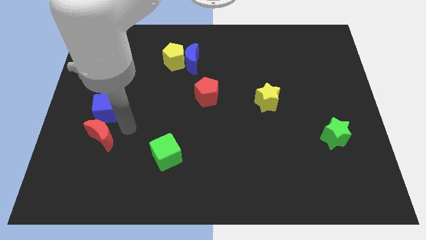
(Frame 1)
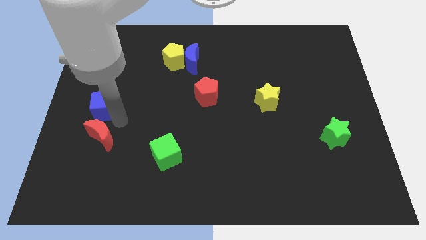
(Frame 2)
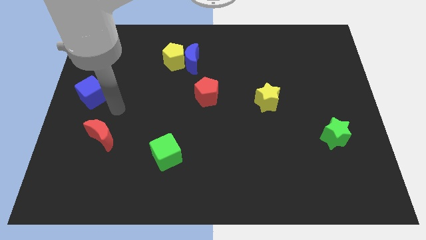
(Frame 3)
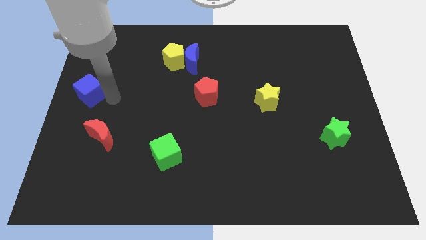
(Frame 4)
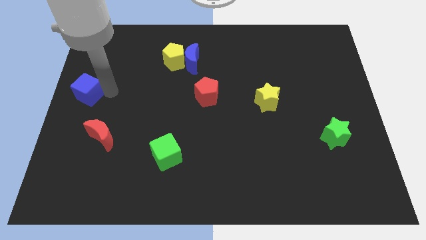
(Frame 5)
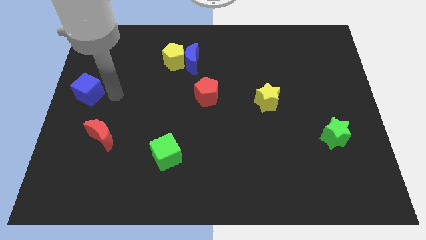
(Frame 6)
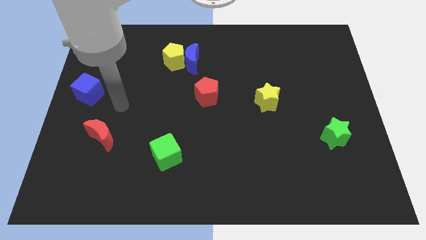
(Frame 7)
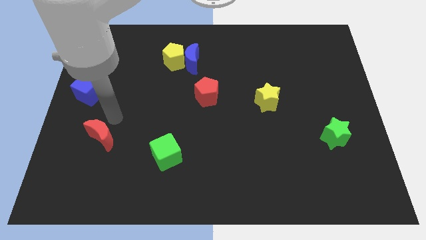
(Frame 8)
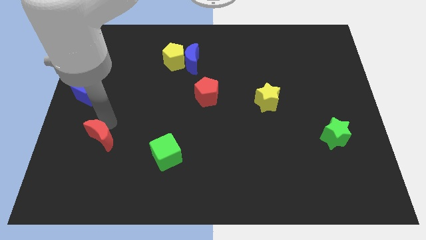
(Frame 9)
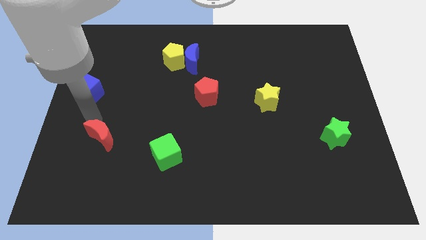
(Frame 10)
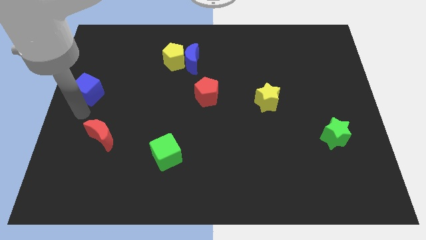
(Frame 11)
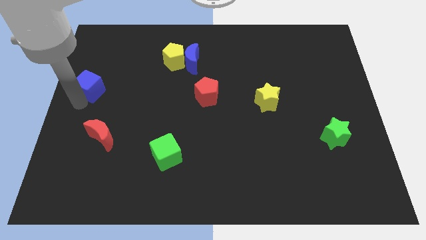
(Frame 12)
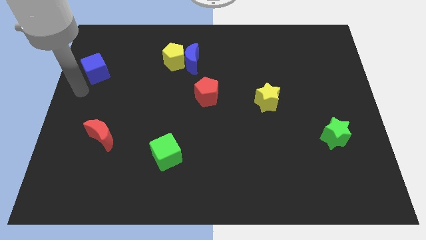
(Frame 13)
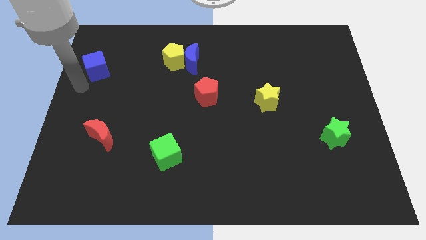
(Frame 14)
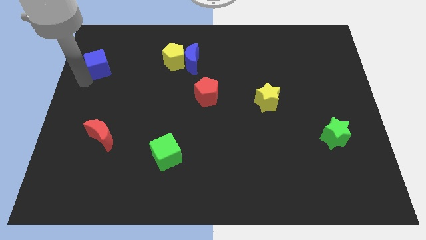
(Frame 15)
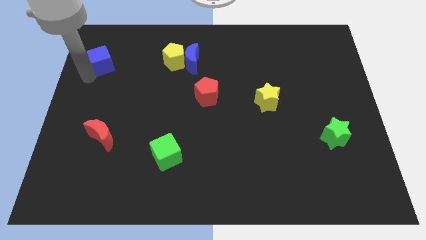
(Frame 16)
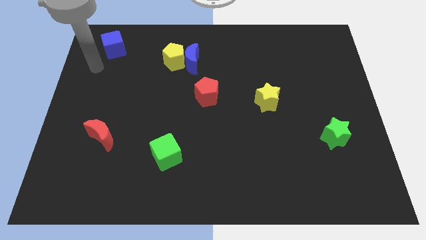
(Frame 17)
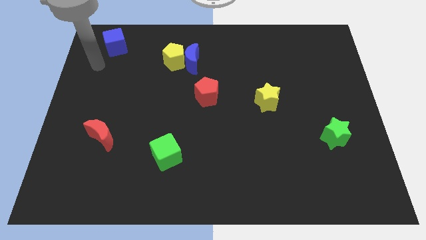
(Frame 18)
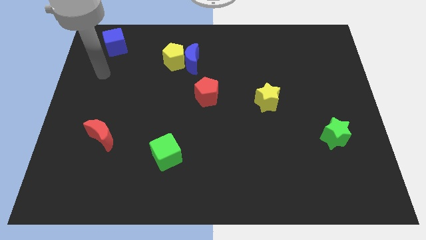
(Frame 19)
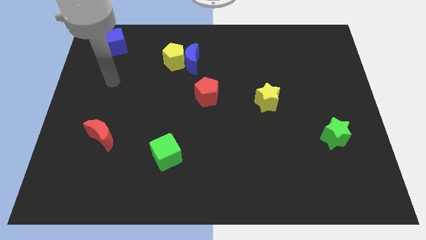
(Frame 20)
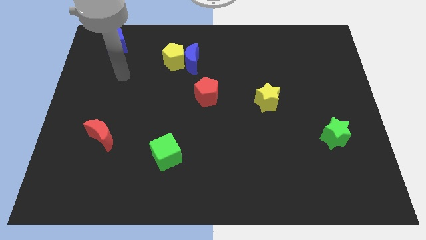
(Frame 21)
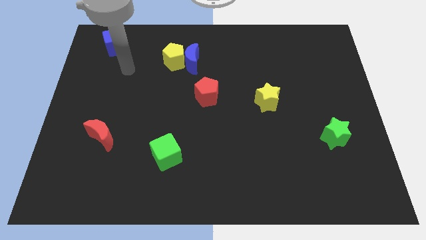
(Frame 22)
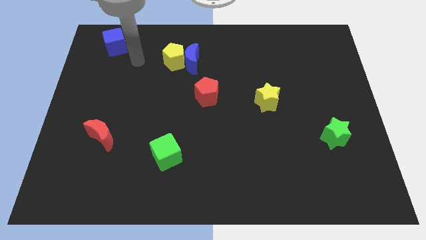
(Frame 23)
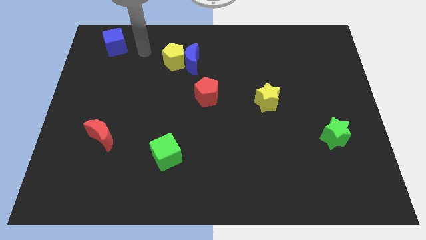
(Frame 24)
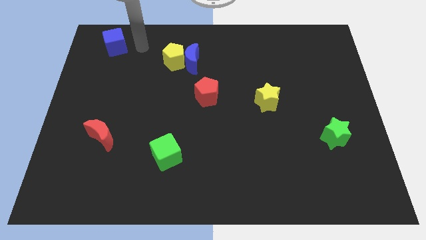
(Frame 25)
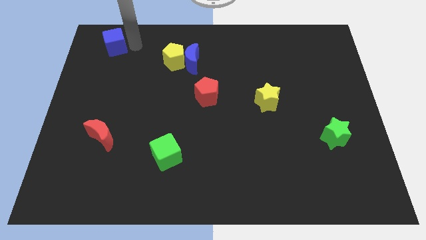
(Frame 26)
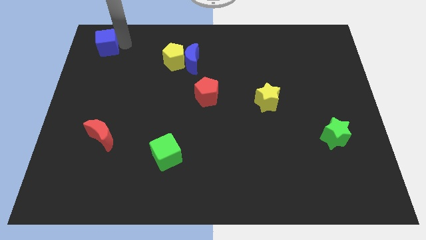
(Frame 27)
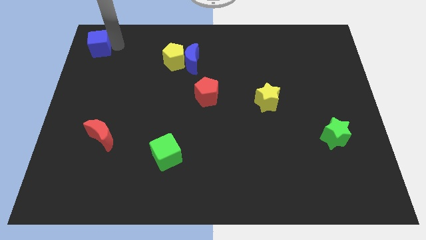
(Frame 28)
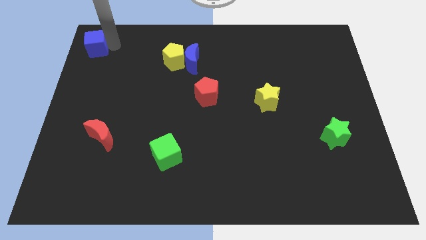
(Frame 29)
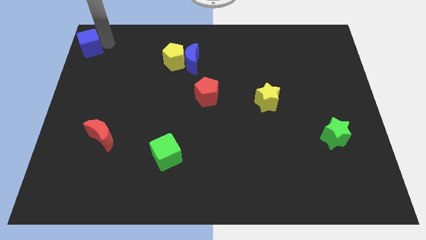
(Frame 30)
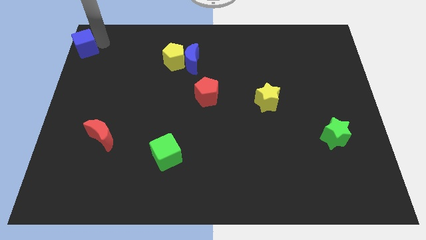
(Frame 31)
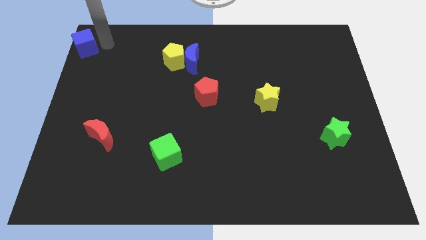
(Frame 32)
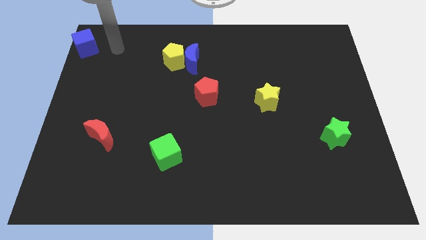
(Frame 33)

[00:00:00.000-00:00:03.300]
push the blue cube to the top left

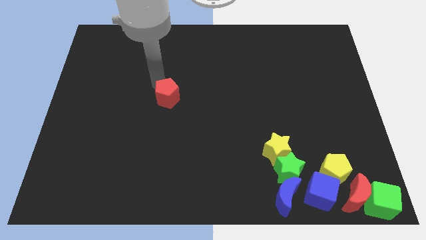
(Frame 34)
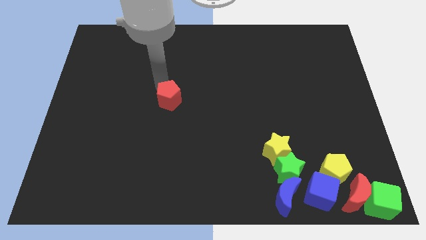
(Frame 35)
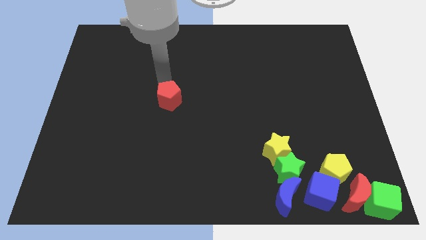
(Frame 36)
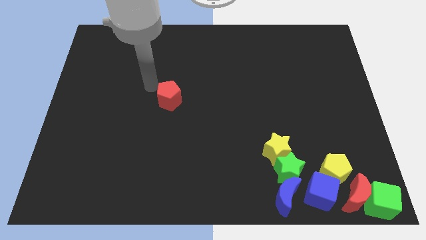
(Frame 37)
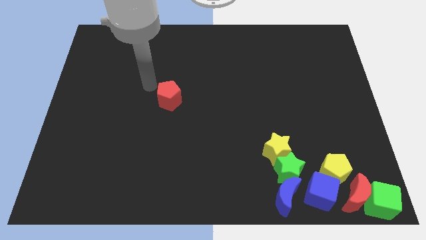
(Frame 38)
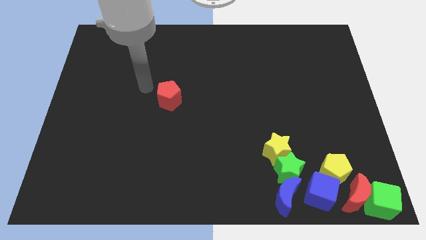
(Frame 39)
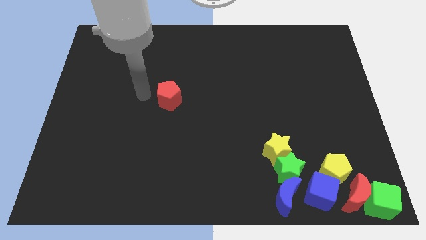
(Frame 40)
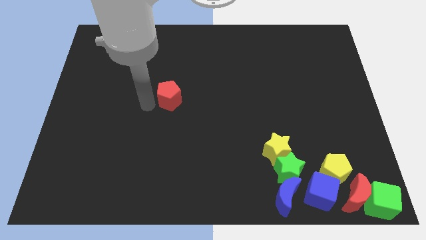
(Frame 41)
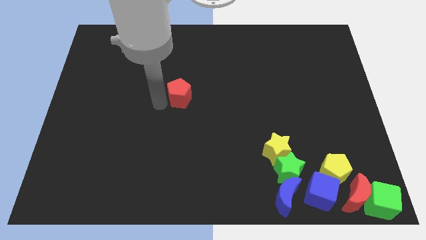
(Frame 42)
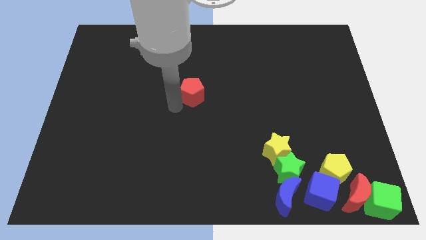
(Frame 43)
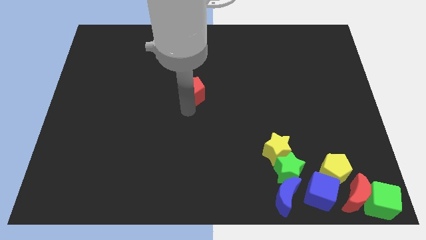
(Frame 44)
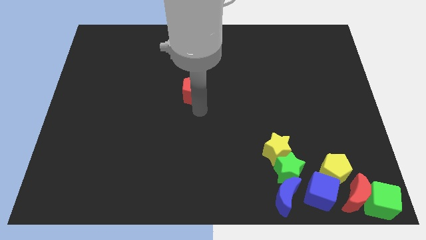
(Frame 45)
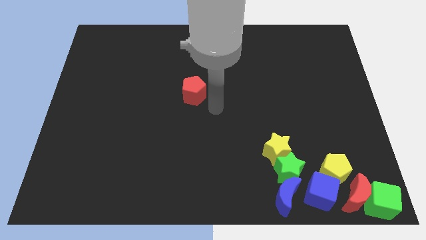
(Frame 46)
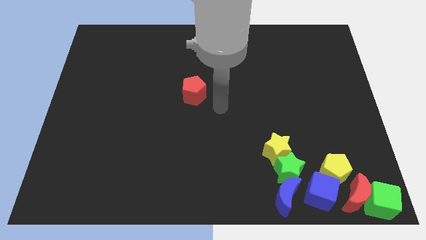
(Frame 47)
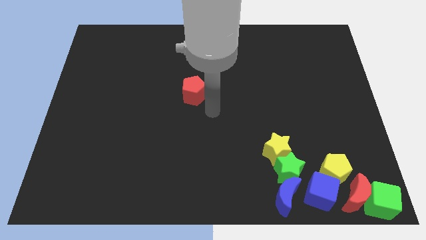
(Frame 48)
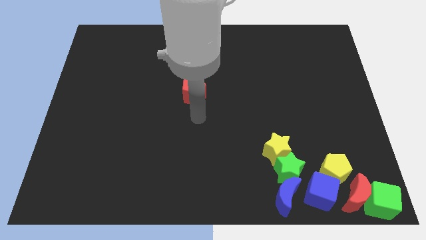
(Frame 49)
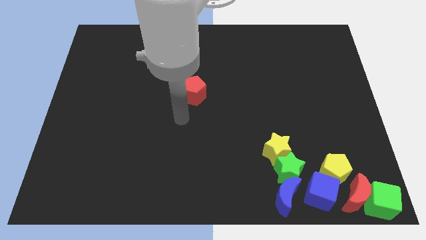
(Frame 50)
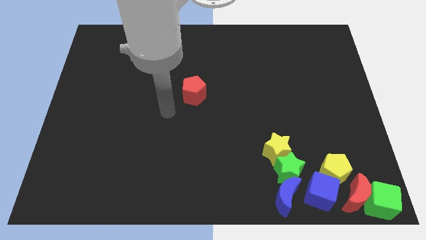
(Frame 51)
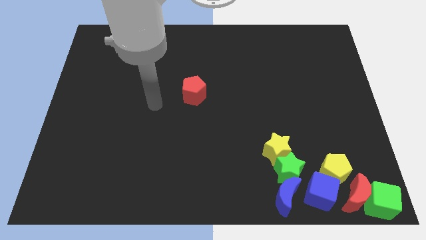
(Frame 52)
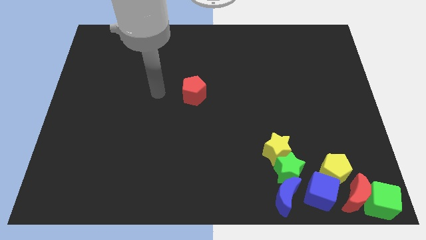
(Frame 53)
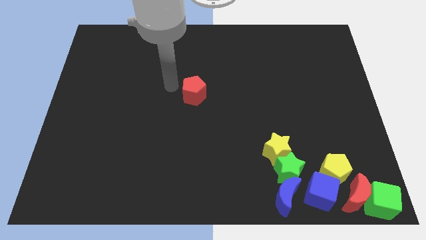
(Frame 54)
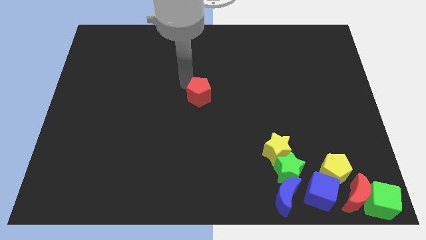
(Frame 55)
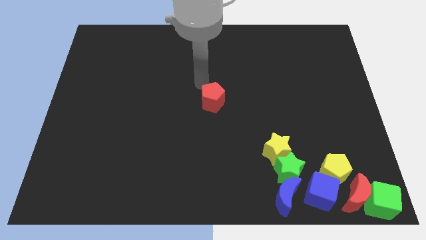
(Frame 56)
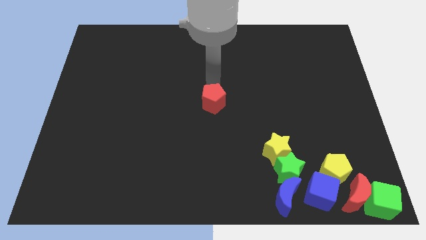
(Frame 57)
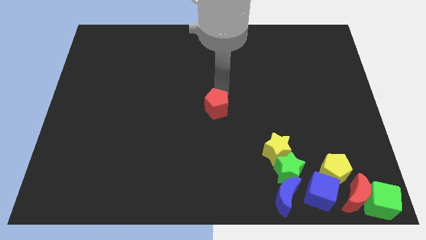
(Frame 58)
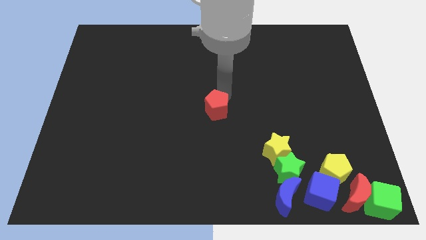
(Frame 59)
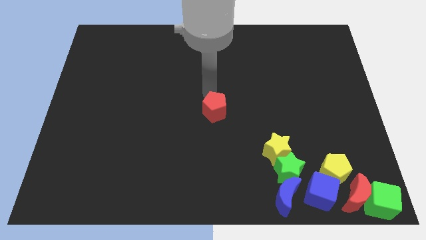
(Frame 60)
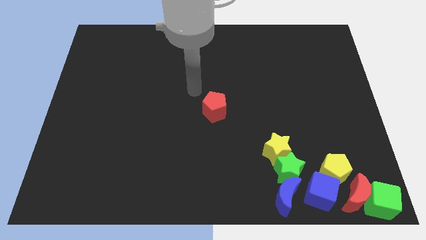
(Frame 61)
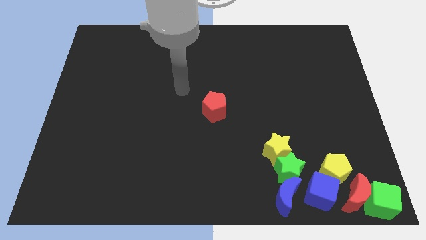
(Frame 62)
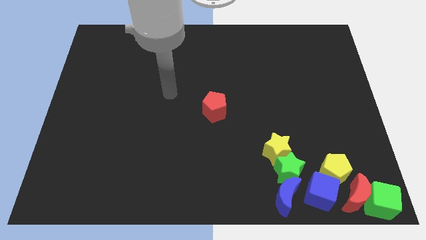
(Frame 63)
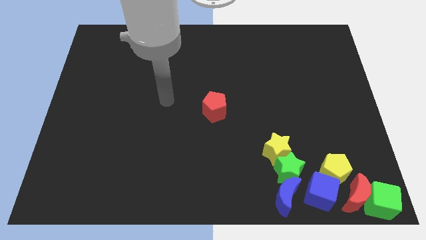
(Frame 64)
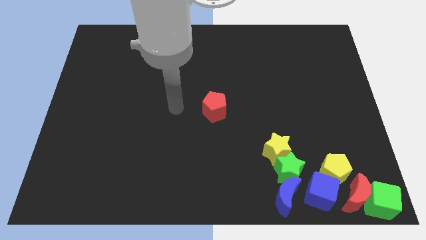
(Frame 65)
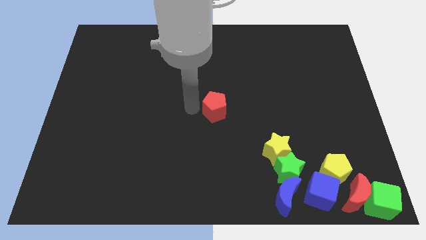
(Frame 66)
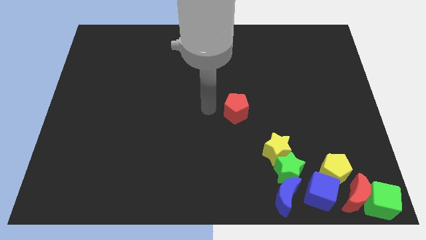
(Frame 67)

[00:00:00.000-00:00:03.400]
push the red pentagon downwards

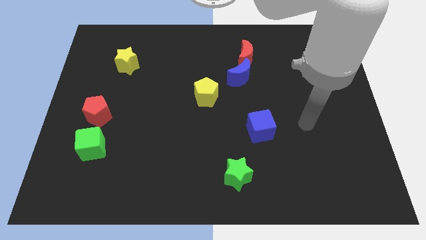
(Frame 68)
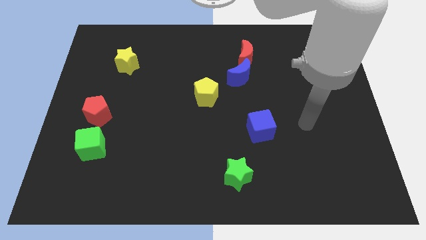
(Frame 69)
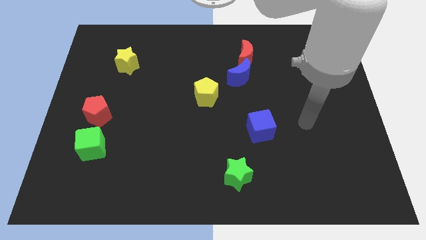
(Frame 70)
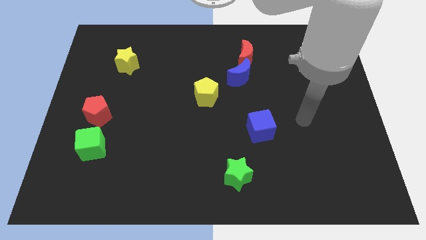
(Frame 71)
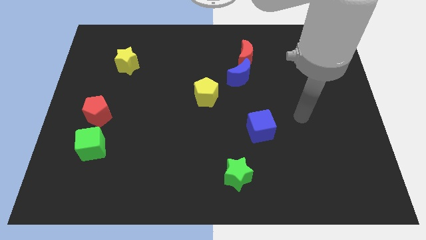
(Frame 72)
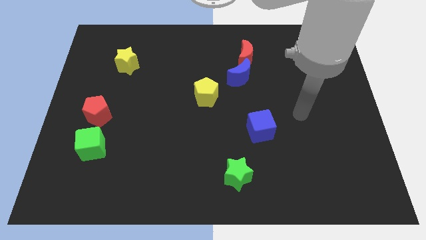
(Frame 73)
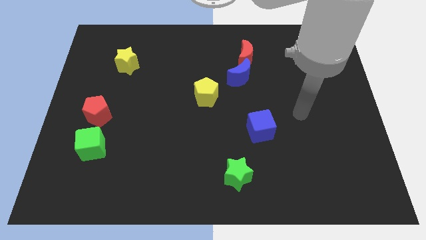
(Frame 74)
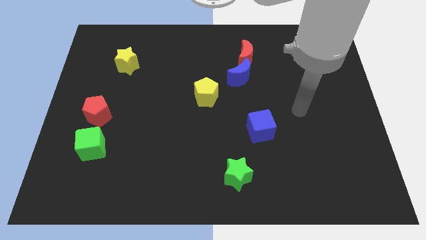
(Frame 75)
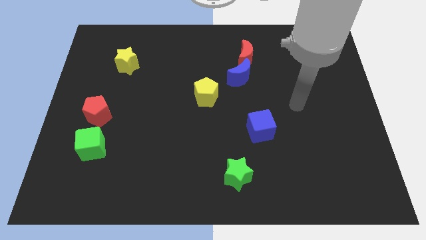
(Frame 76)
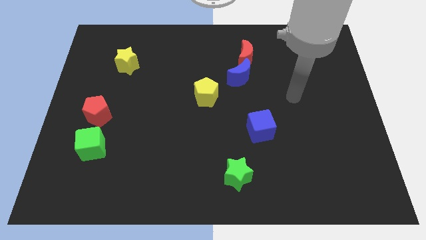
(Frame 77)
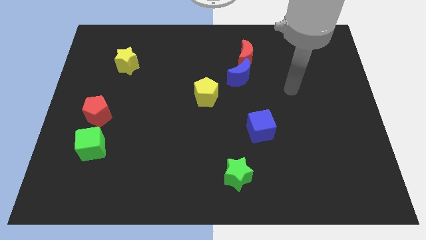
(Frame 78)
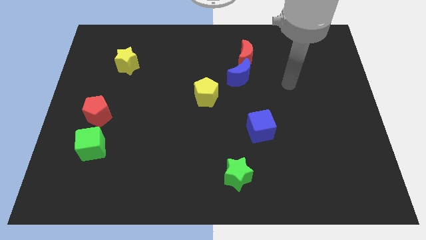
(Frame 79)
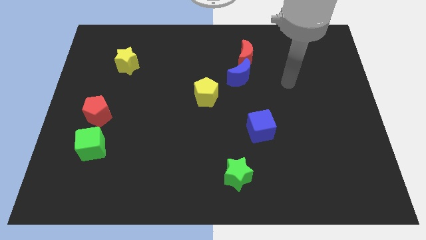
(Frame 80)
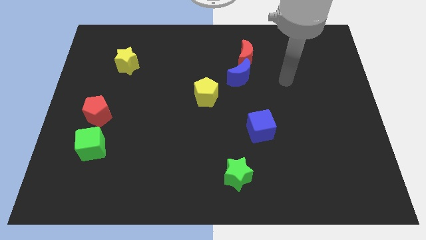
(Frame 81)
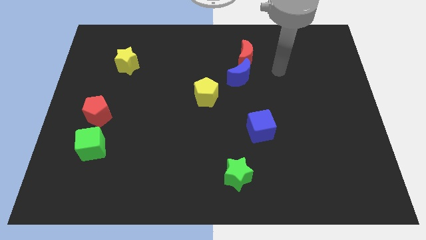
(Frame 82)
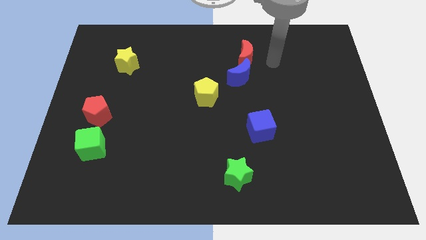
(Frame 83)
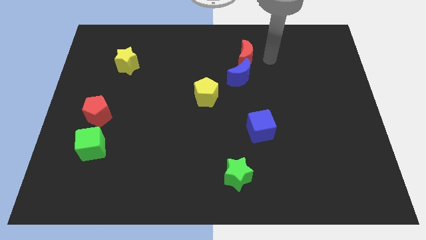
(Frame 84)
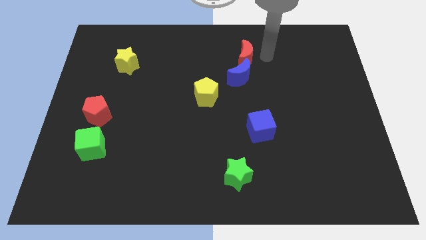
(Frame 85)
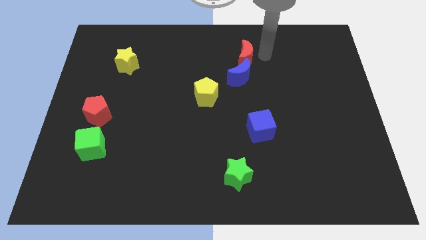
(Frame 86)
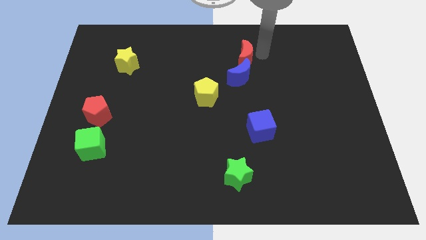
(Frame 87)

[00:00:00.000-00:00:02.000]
place your arm to the right of red moon

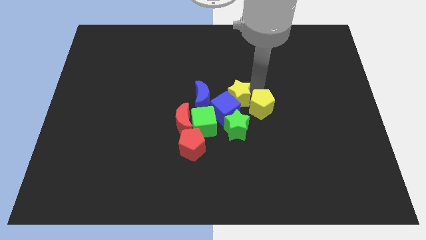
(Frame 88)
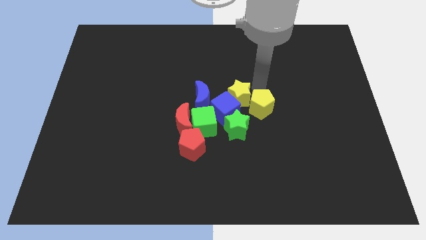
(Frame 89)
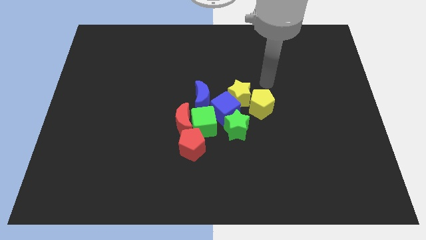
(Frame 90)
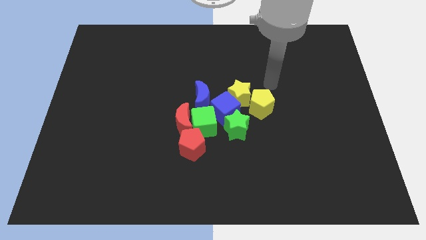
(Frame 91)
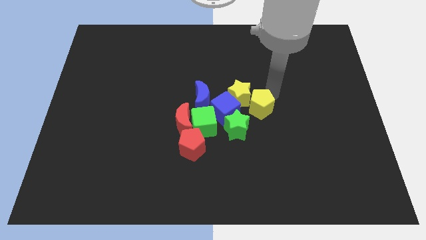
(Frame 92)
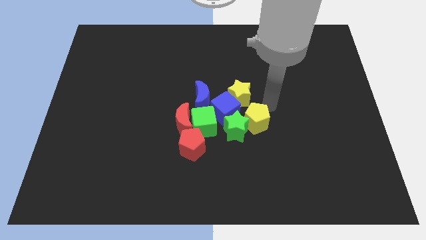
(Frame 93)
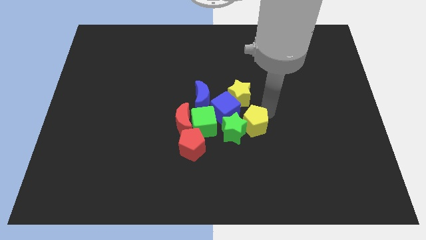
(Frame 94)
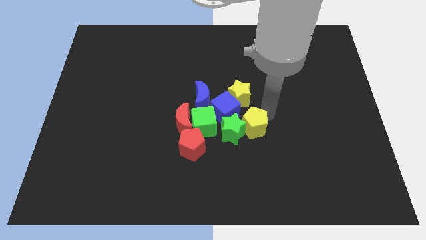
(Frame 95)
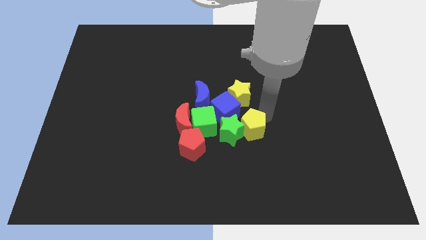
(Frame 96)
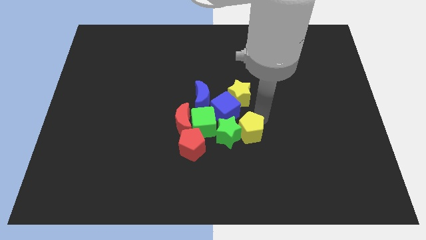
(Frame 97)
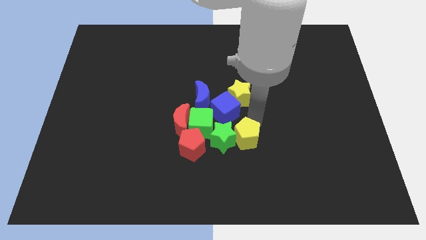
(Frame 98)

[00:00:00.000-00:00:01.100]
push the yellow pentagon into the green star
